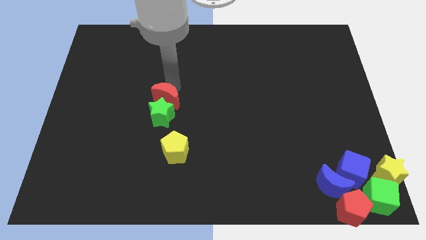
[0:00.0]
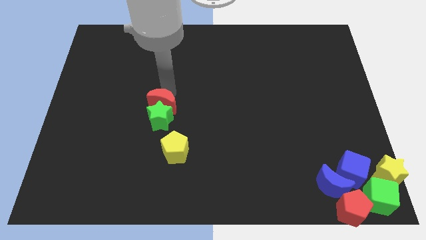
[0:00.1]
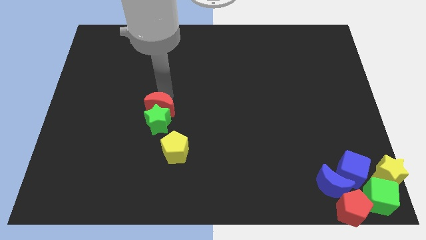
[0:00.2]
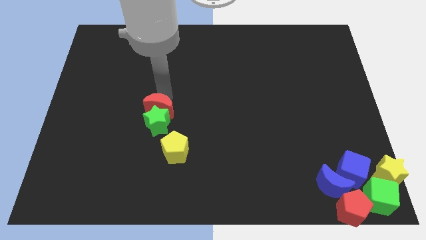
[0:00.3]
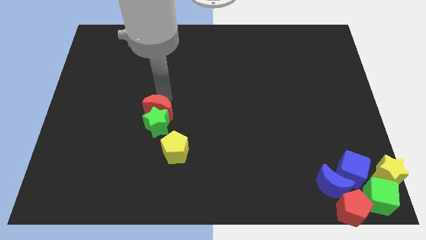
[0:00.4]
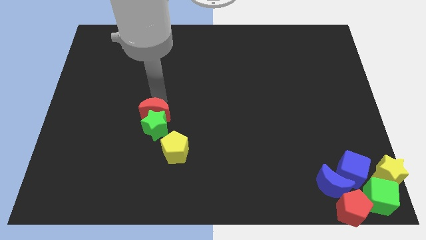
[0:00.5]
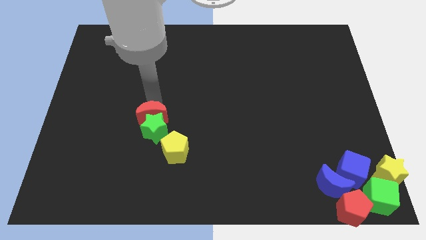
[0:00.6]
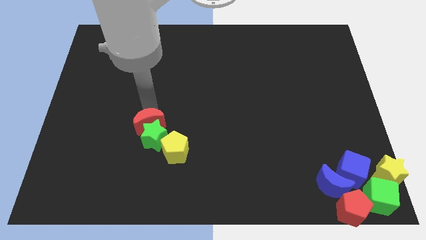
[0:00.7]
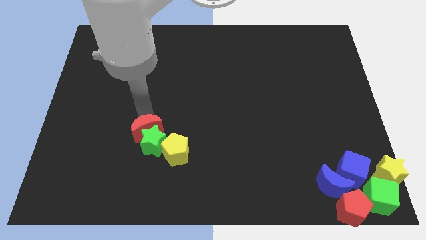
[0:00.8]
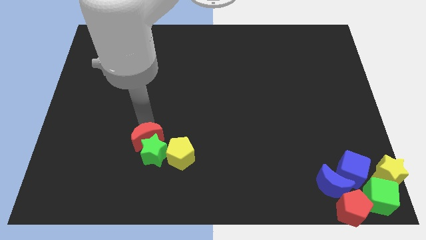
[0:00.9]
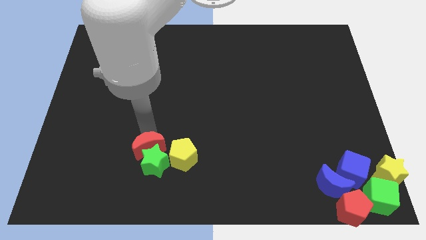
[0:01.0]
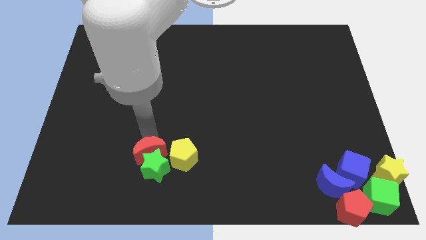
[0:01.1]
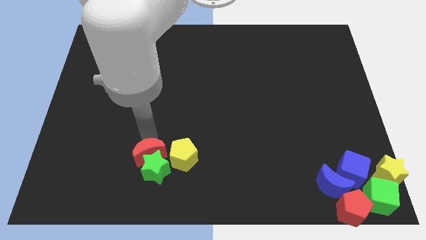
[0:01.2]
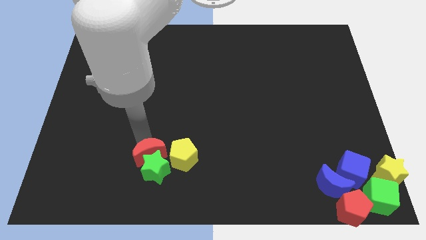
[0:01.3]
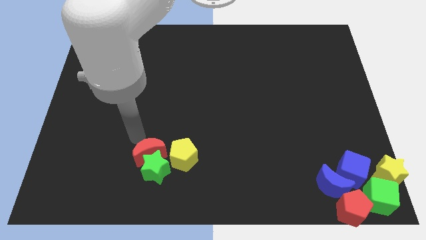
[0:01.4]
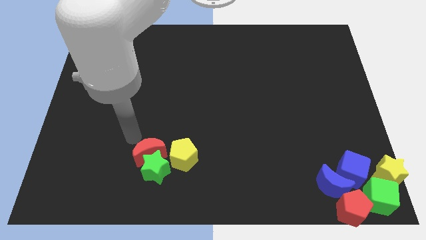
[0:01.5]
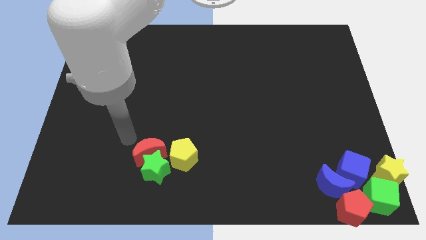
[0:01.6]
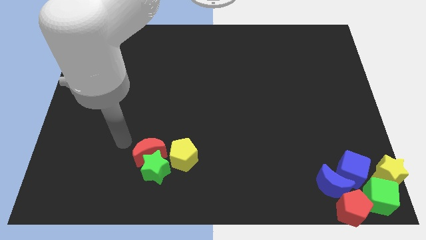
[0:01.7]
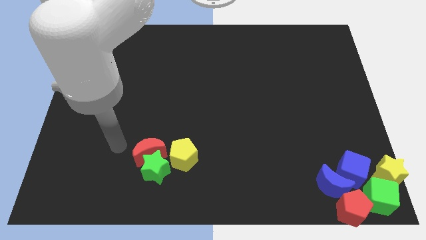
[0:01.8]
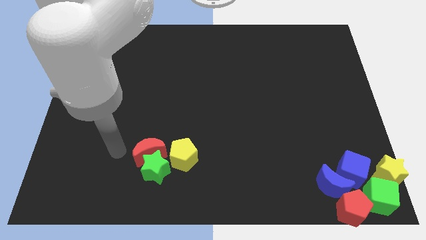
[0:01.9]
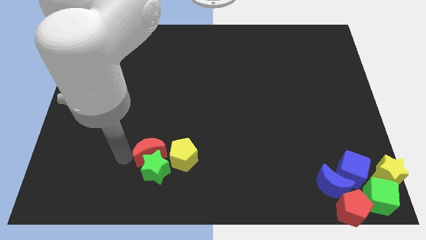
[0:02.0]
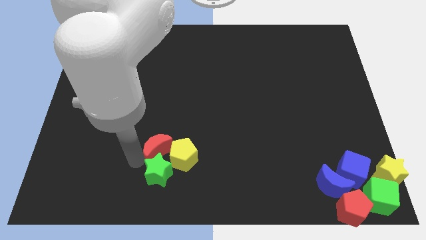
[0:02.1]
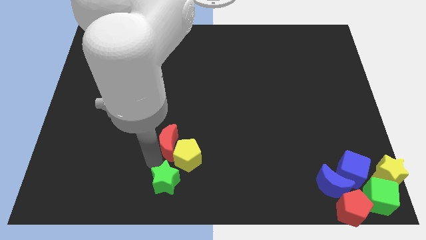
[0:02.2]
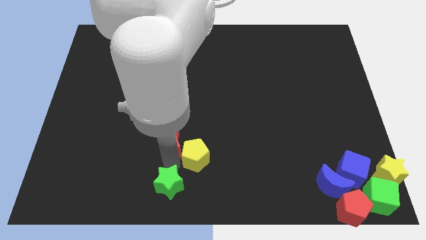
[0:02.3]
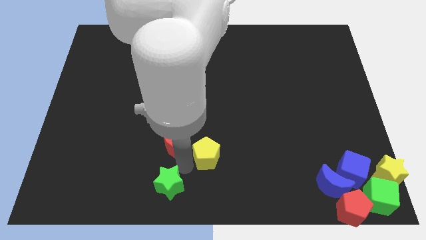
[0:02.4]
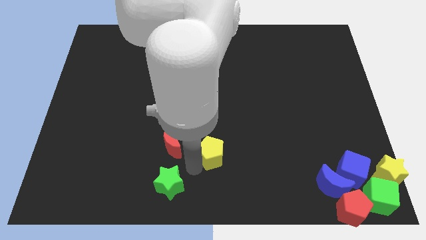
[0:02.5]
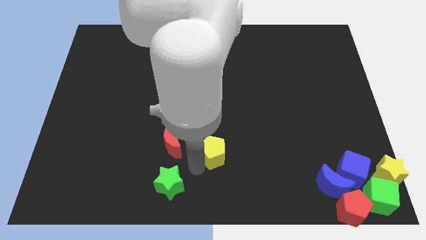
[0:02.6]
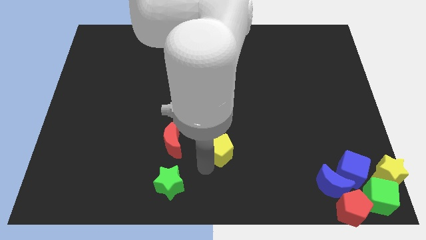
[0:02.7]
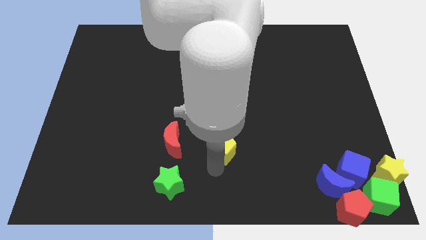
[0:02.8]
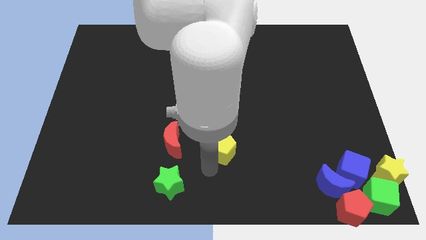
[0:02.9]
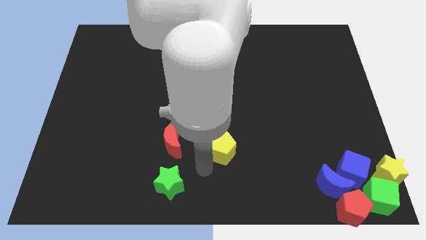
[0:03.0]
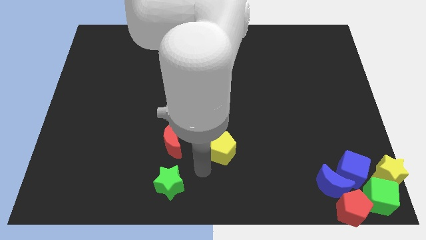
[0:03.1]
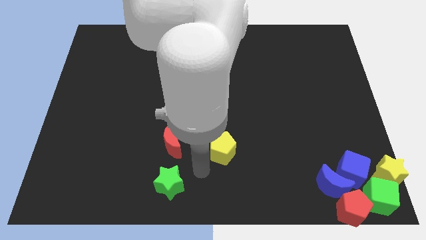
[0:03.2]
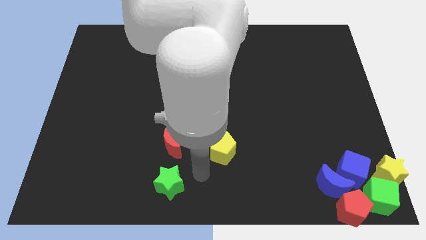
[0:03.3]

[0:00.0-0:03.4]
push the red crescent with green star towards the yellow pentagon

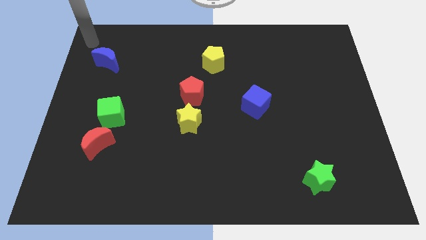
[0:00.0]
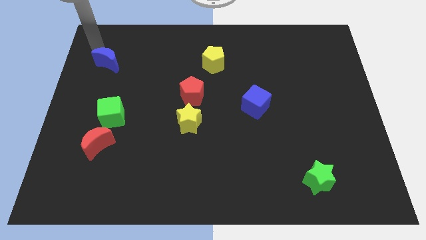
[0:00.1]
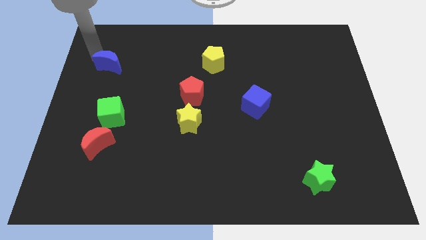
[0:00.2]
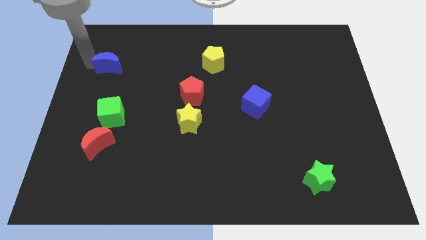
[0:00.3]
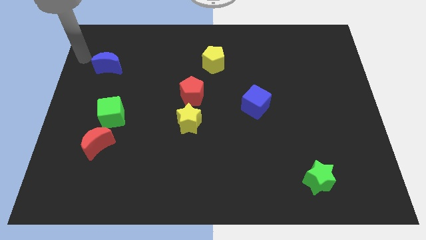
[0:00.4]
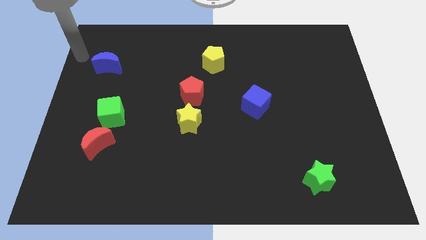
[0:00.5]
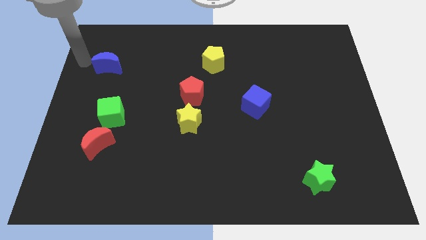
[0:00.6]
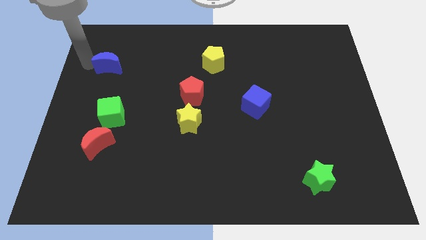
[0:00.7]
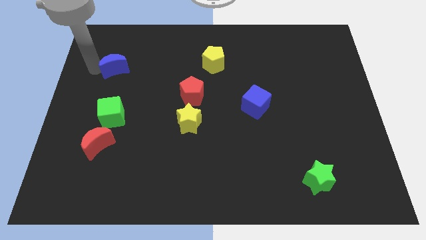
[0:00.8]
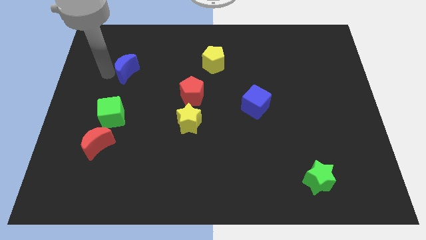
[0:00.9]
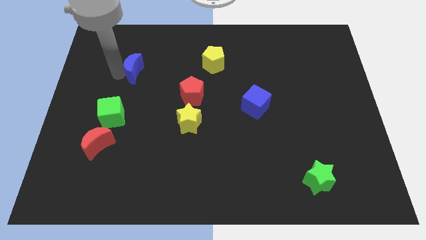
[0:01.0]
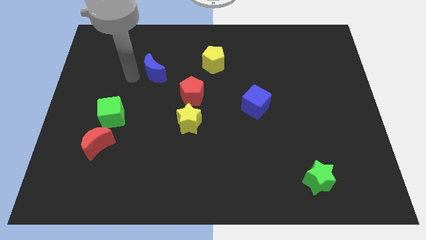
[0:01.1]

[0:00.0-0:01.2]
move the blue crescent towards red pentagon

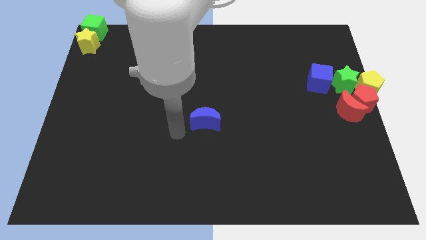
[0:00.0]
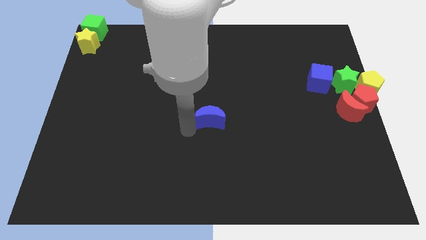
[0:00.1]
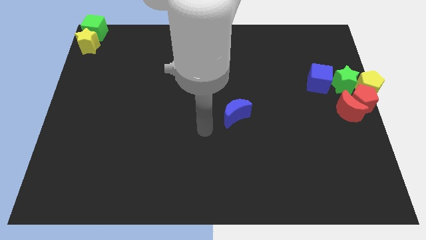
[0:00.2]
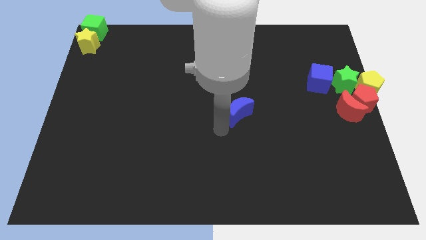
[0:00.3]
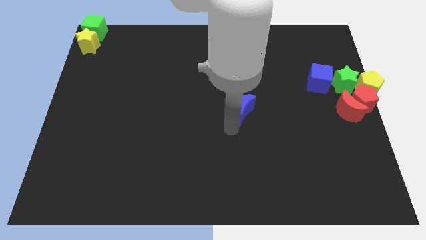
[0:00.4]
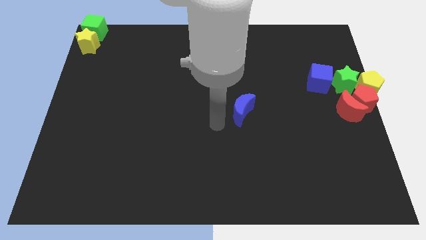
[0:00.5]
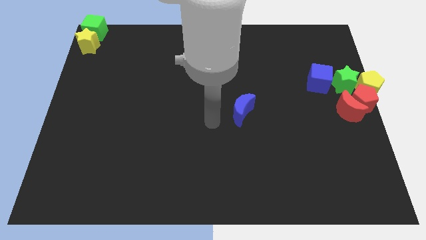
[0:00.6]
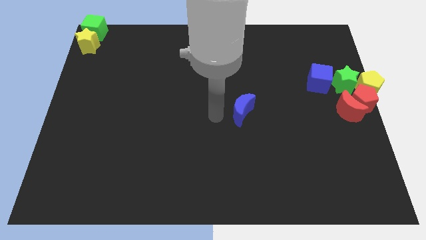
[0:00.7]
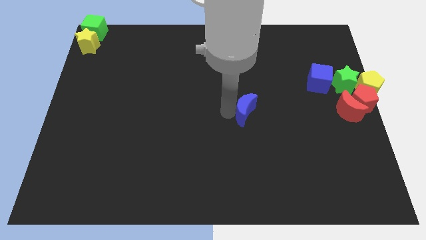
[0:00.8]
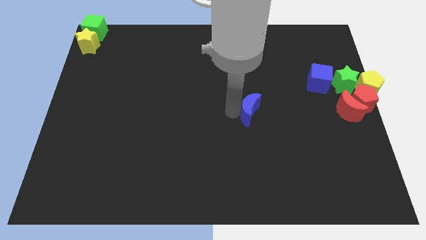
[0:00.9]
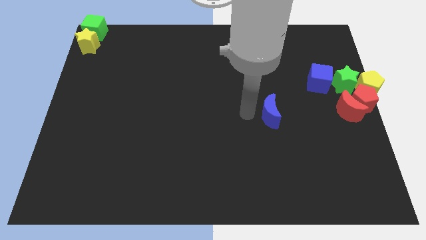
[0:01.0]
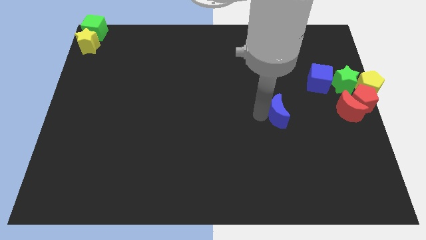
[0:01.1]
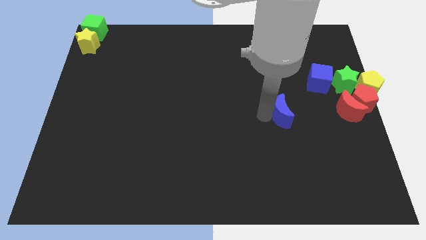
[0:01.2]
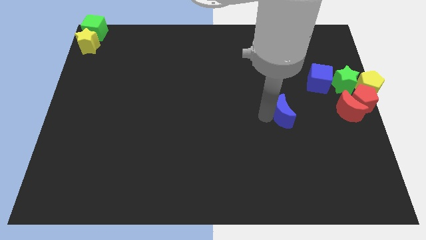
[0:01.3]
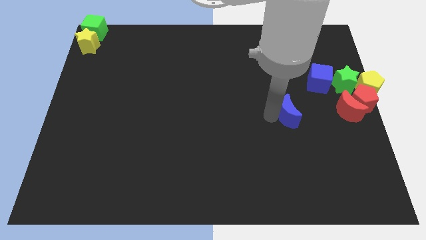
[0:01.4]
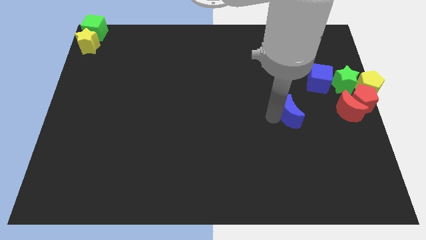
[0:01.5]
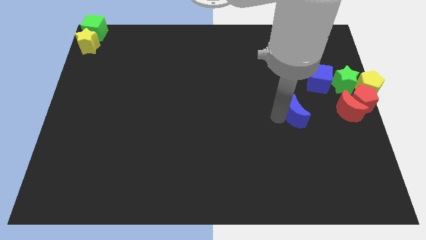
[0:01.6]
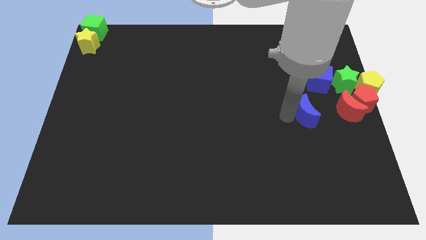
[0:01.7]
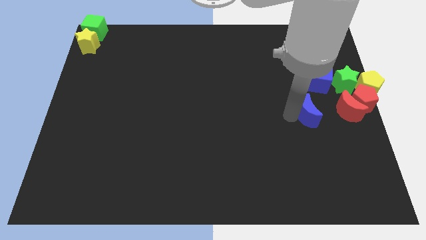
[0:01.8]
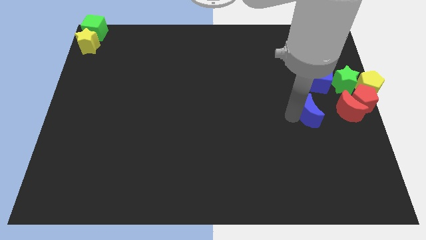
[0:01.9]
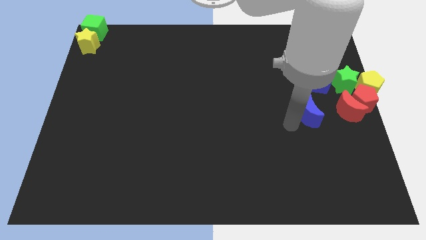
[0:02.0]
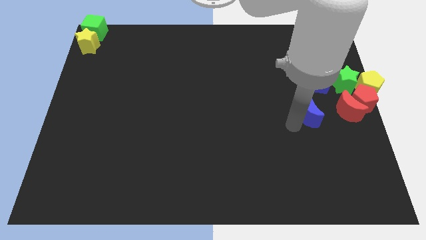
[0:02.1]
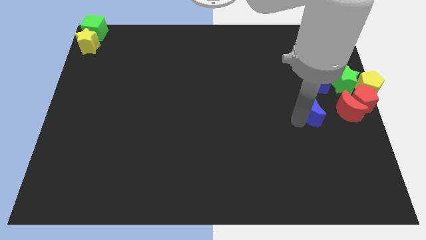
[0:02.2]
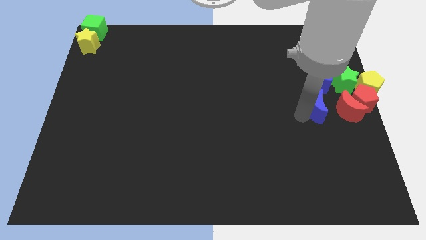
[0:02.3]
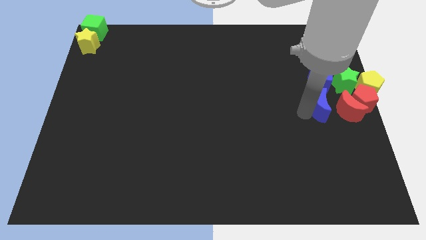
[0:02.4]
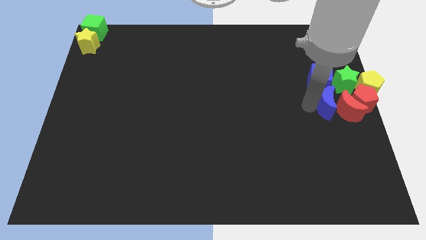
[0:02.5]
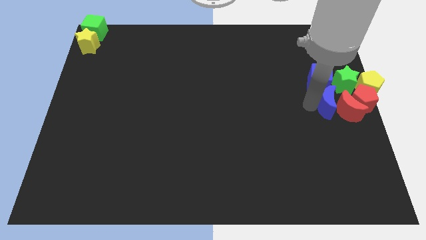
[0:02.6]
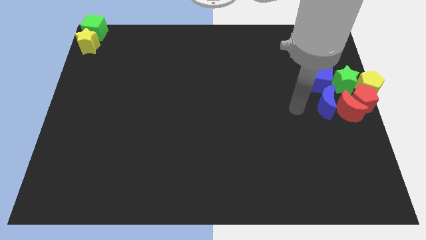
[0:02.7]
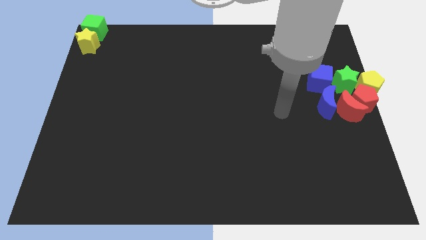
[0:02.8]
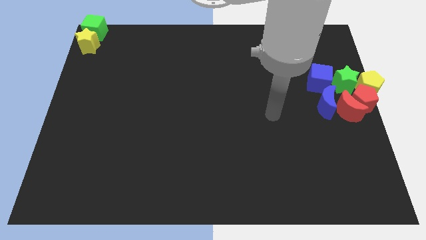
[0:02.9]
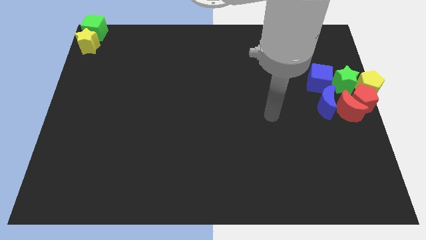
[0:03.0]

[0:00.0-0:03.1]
move the blue moon towards the group of blocks

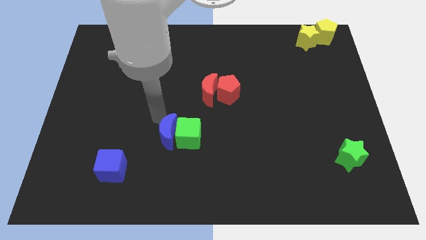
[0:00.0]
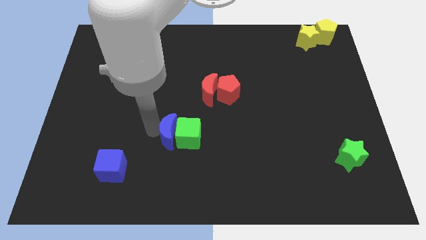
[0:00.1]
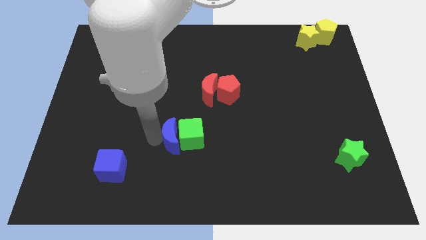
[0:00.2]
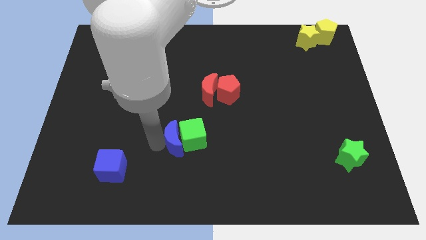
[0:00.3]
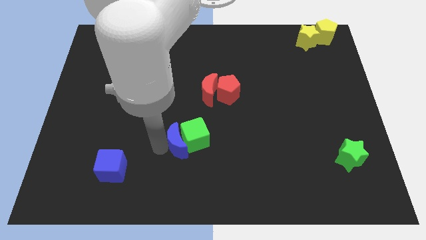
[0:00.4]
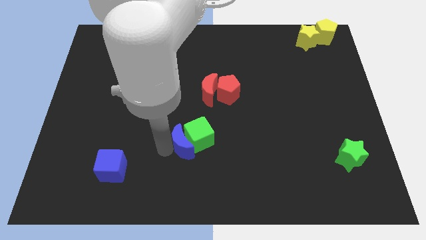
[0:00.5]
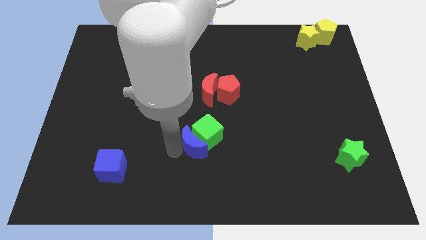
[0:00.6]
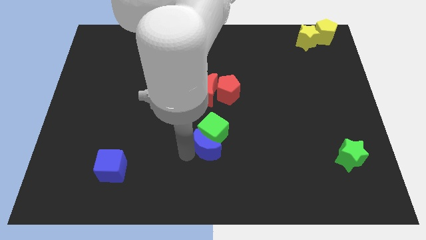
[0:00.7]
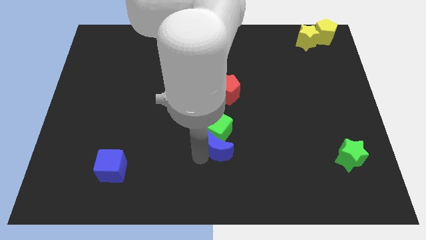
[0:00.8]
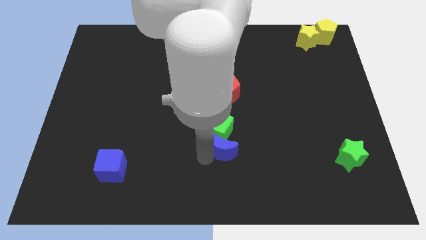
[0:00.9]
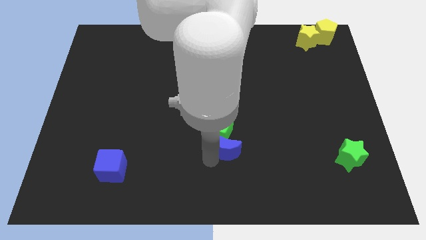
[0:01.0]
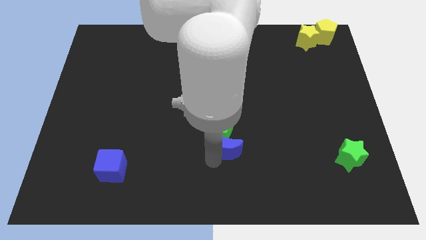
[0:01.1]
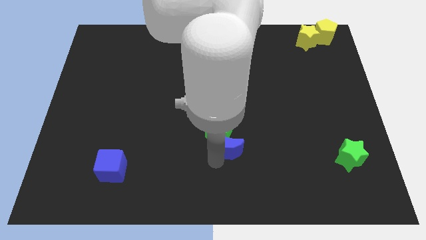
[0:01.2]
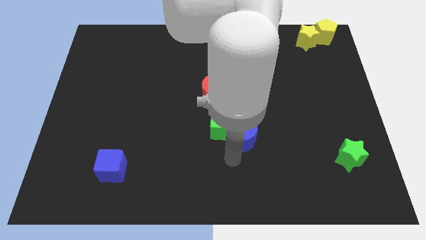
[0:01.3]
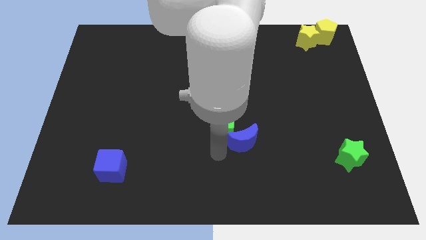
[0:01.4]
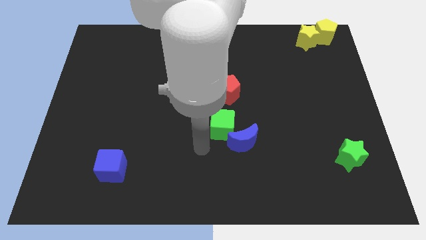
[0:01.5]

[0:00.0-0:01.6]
push the blue moon and green cube together below red blocks
